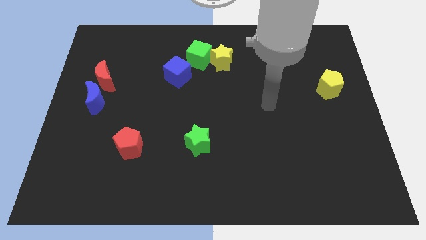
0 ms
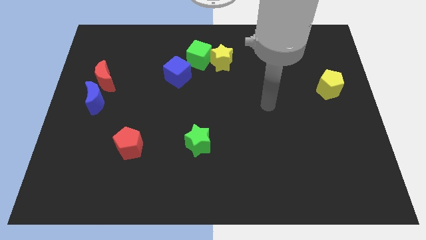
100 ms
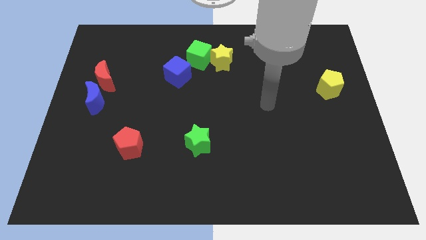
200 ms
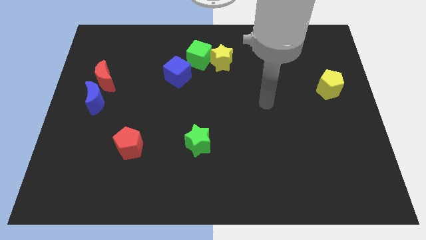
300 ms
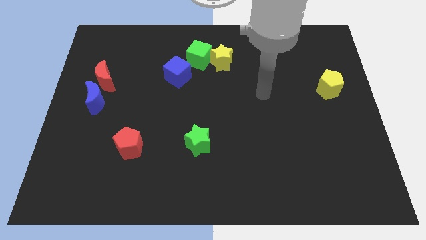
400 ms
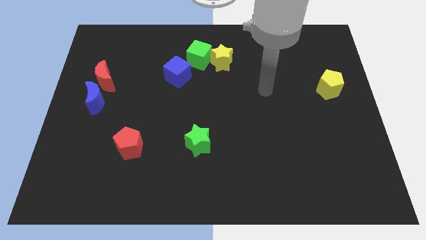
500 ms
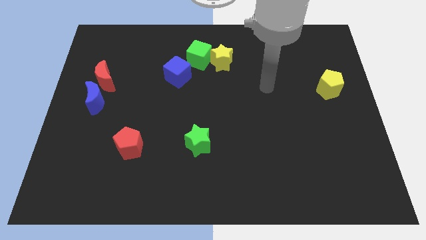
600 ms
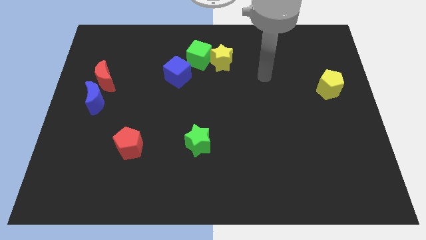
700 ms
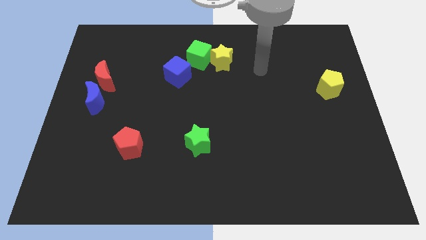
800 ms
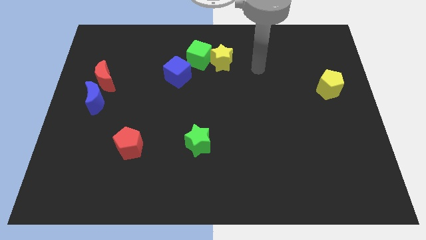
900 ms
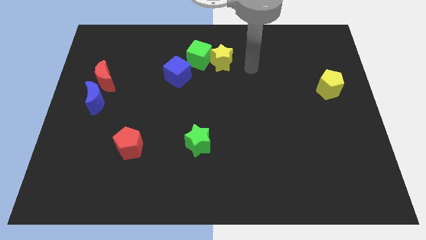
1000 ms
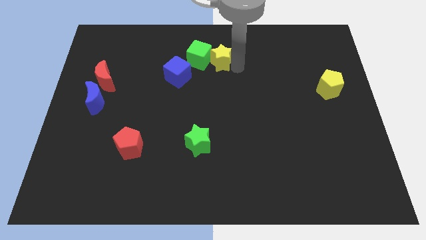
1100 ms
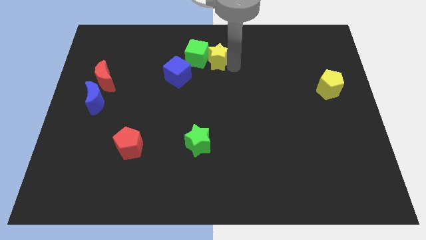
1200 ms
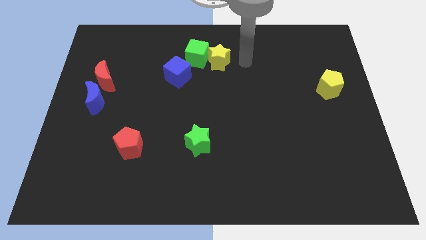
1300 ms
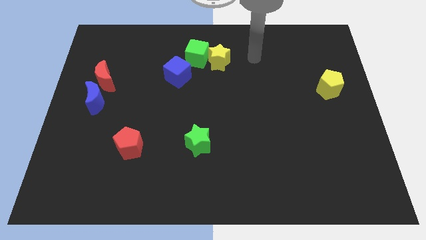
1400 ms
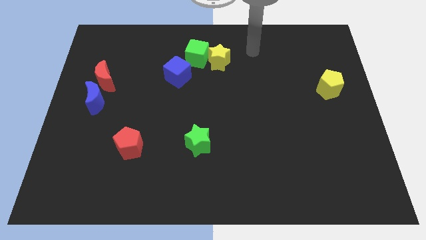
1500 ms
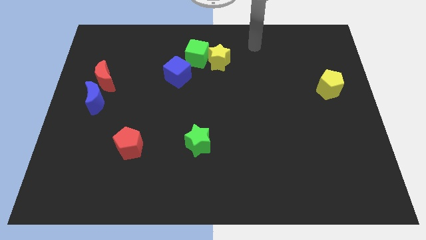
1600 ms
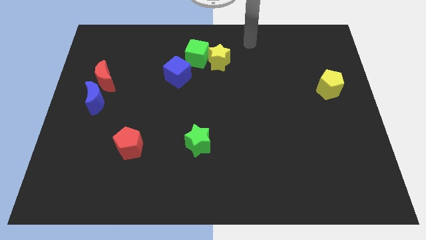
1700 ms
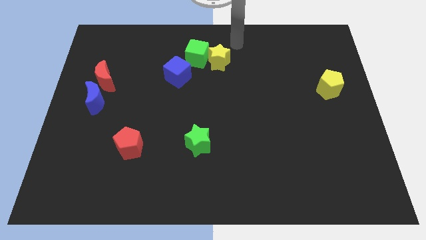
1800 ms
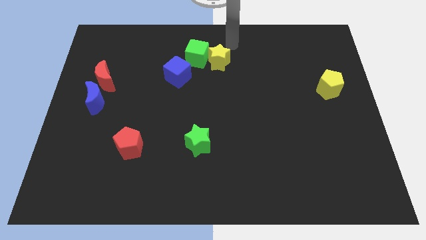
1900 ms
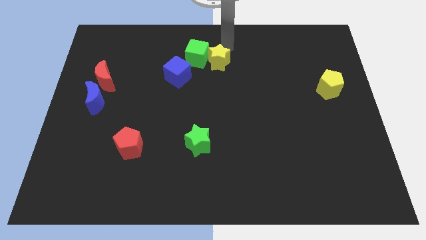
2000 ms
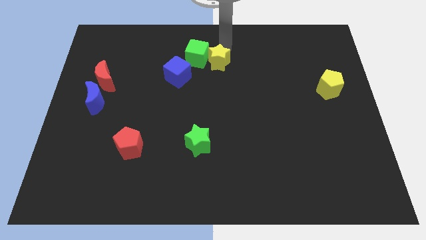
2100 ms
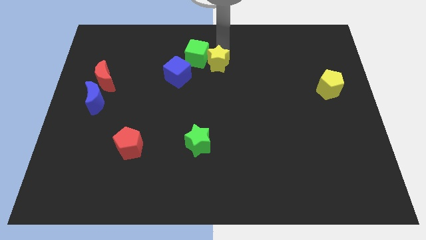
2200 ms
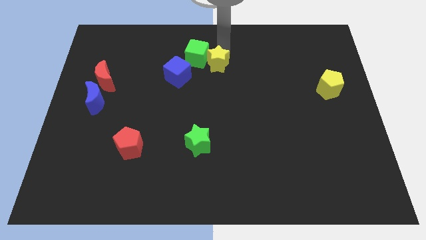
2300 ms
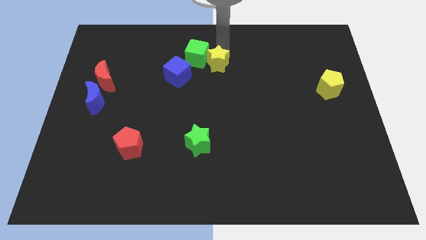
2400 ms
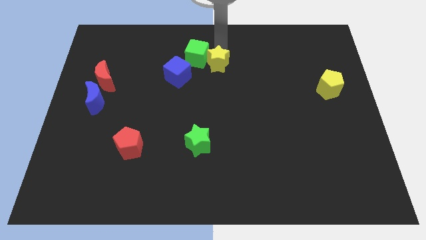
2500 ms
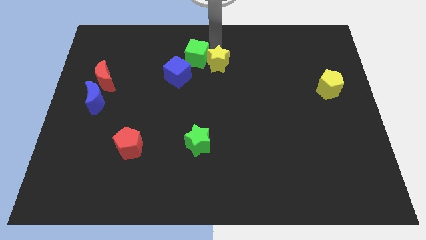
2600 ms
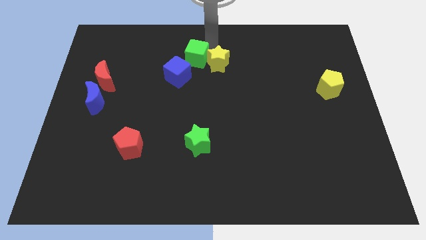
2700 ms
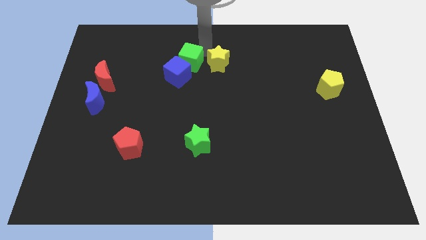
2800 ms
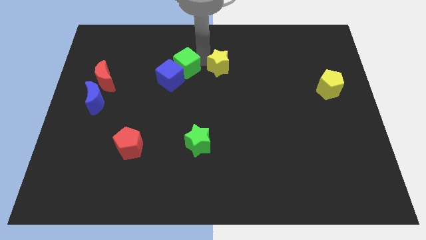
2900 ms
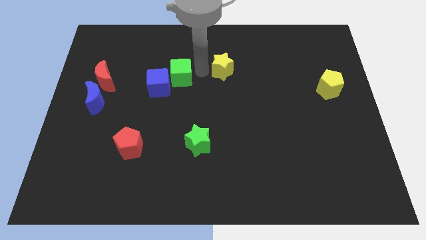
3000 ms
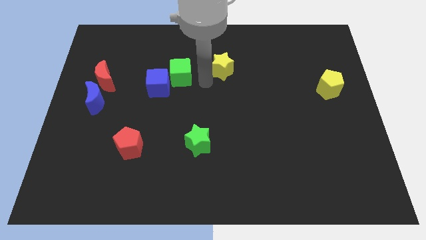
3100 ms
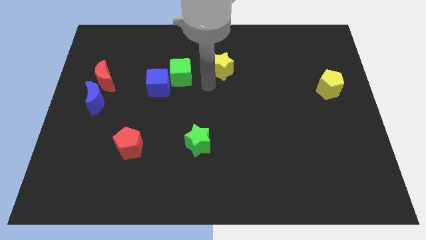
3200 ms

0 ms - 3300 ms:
separate the green cube and yellow star from each other

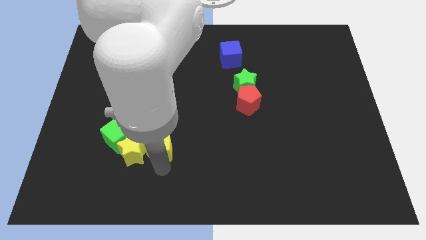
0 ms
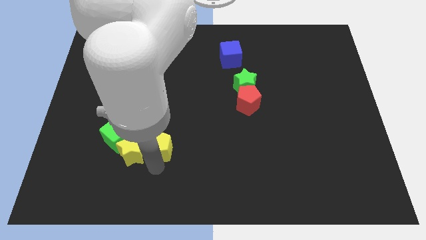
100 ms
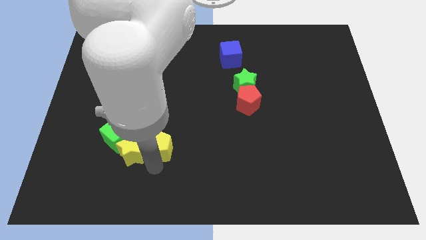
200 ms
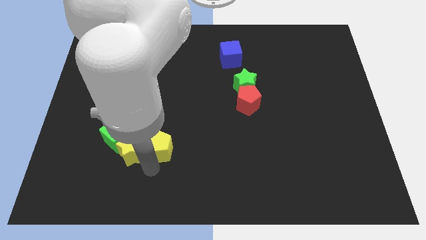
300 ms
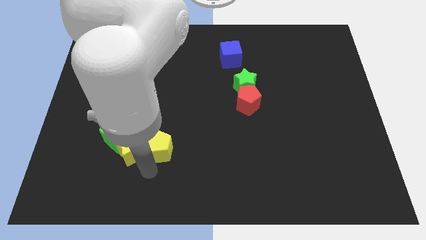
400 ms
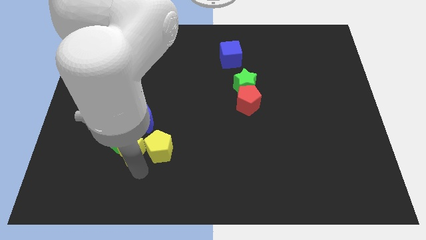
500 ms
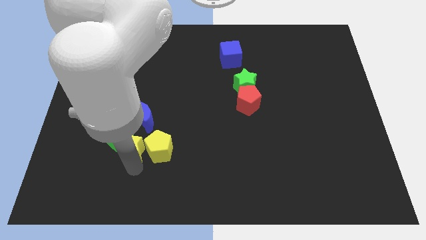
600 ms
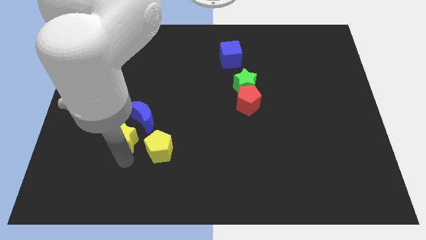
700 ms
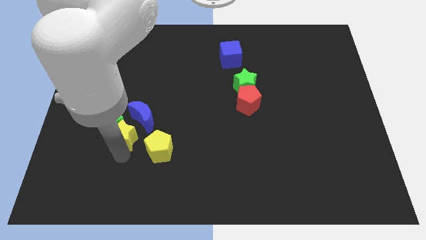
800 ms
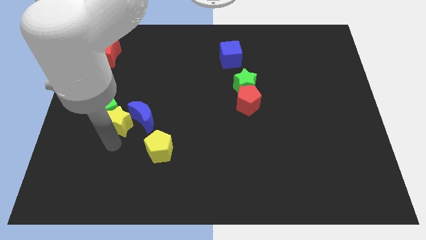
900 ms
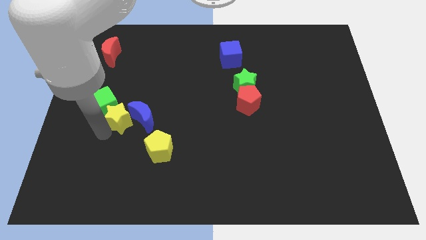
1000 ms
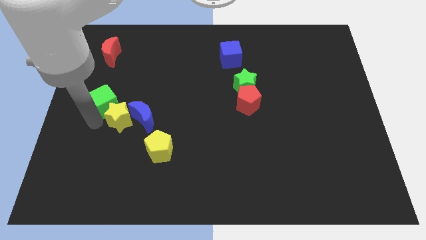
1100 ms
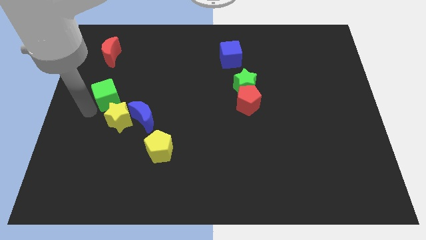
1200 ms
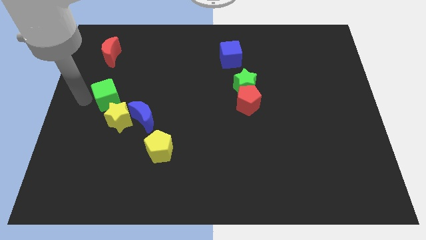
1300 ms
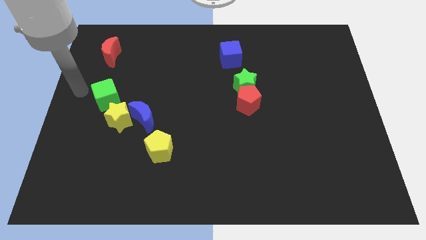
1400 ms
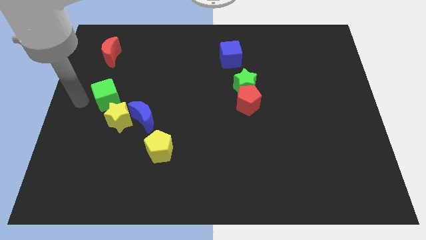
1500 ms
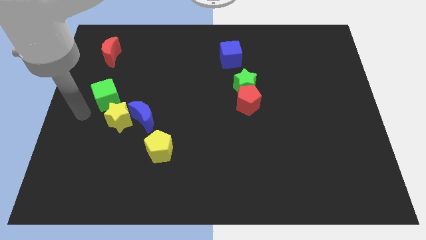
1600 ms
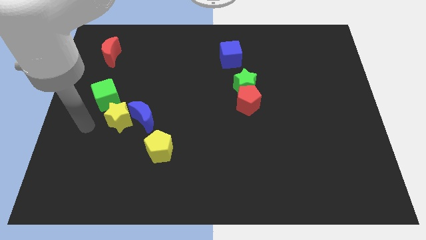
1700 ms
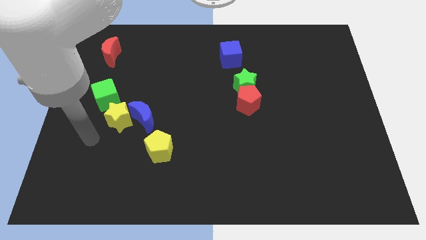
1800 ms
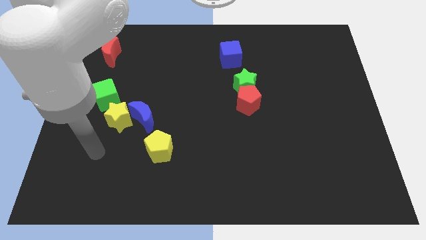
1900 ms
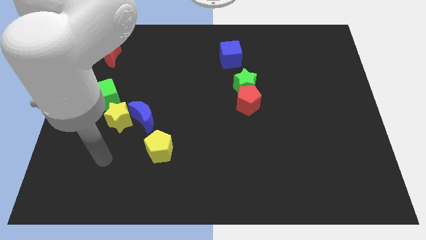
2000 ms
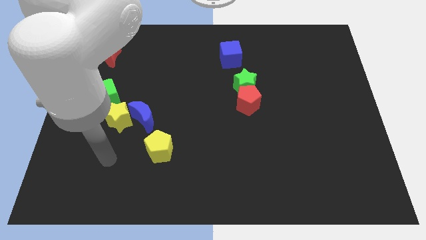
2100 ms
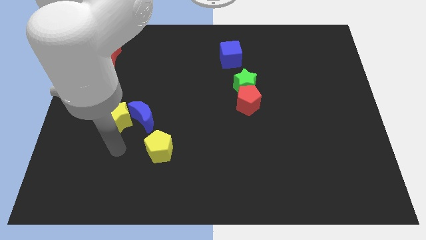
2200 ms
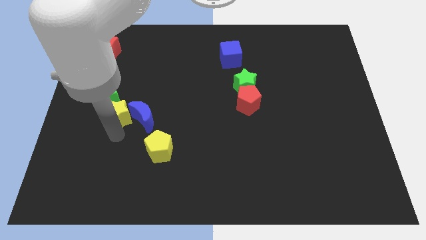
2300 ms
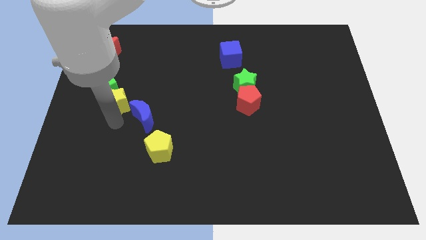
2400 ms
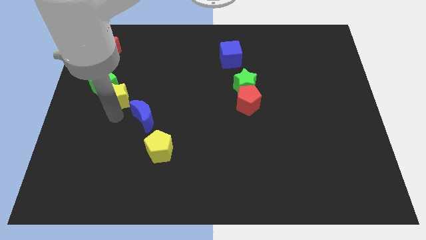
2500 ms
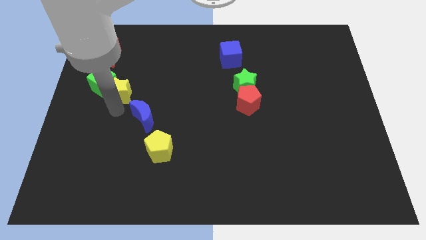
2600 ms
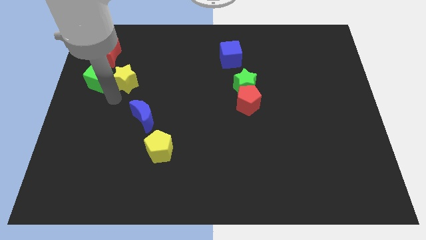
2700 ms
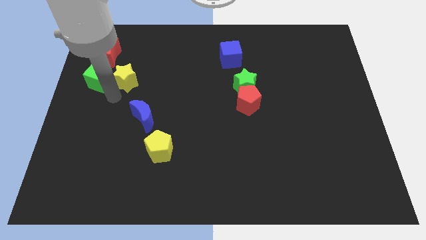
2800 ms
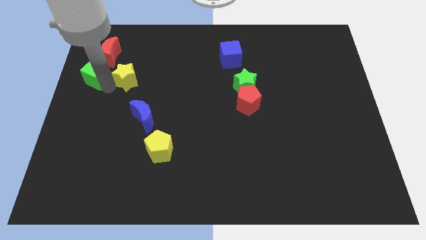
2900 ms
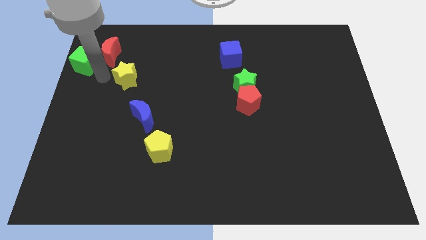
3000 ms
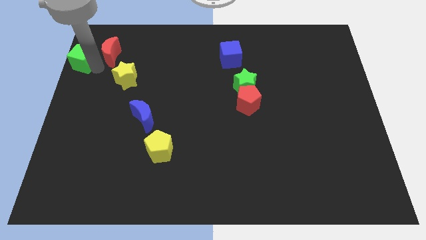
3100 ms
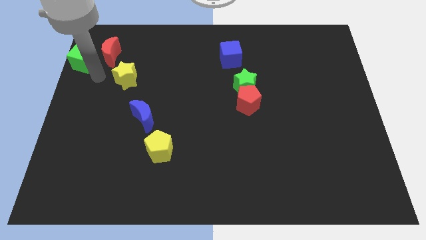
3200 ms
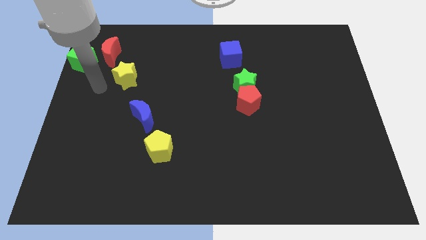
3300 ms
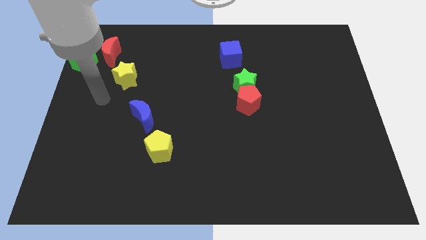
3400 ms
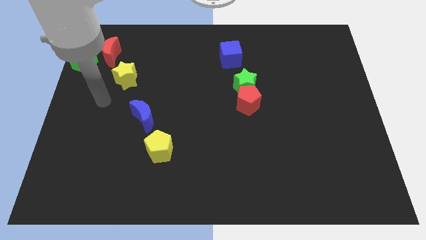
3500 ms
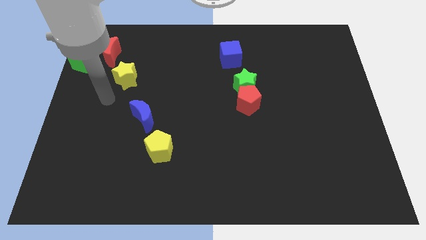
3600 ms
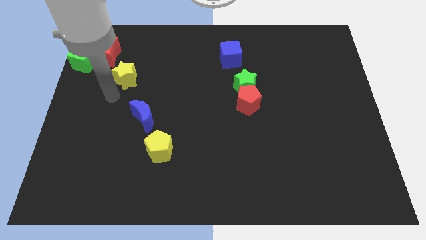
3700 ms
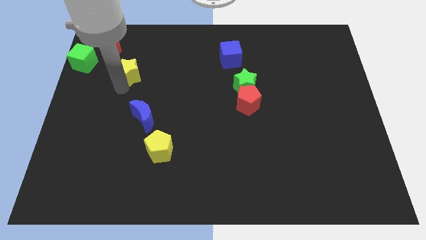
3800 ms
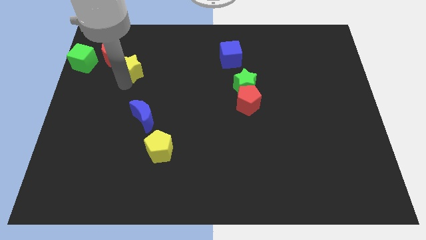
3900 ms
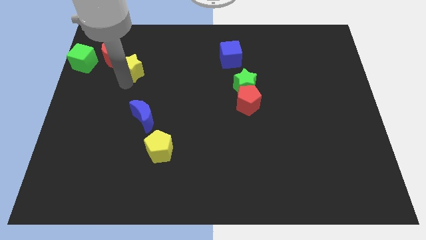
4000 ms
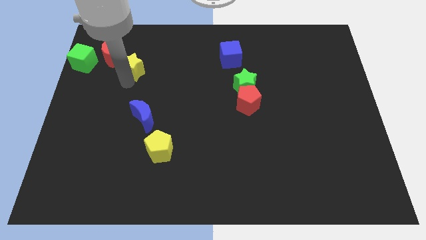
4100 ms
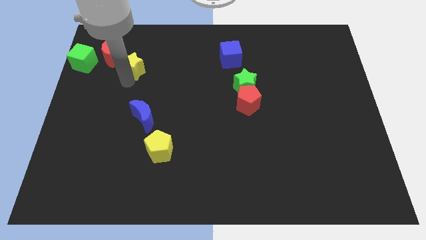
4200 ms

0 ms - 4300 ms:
separate the green block and yellow star from yellow pentagon

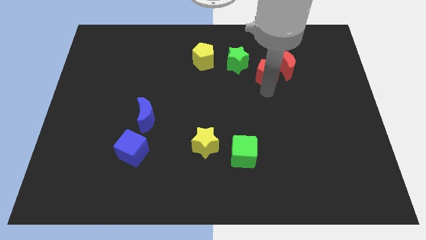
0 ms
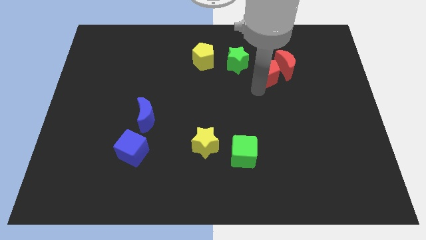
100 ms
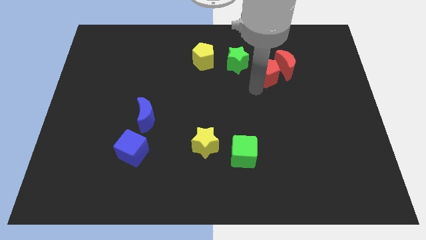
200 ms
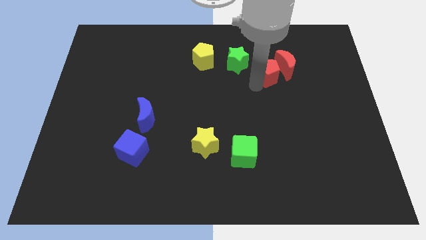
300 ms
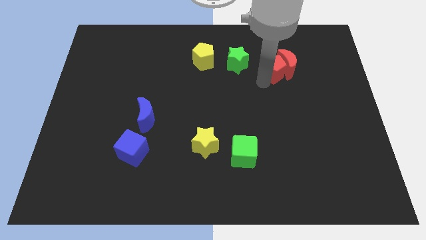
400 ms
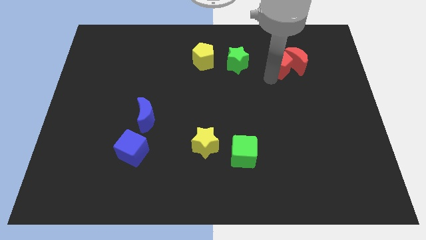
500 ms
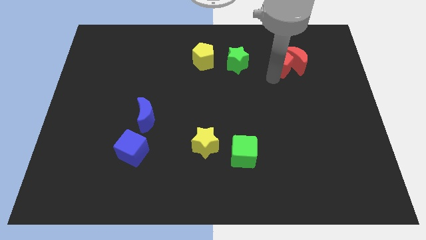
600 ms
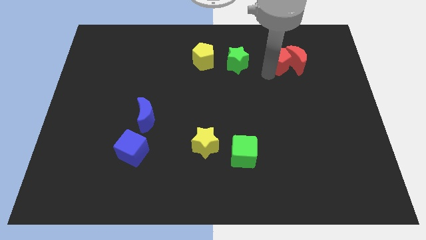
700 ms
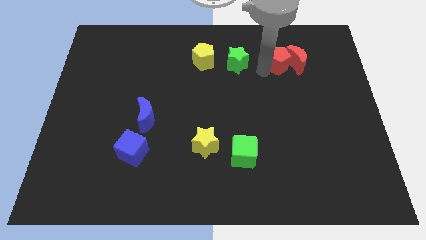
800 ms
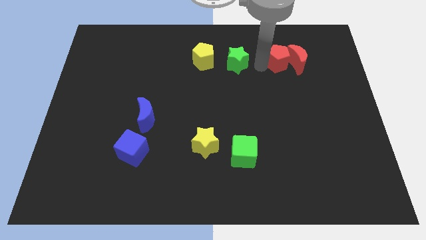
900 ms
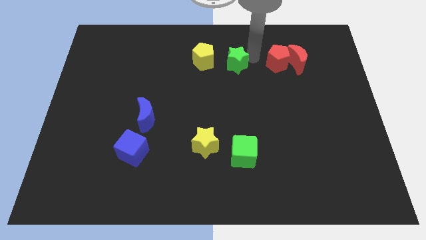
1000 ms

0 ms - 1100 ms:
push the red pentagon along with red crescent towards parallel to the green star

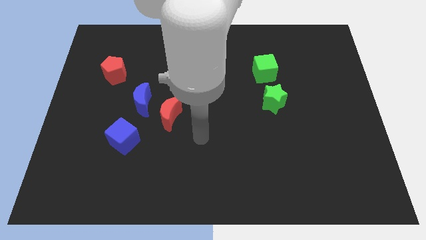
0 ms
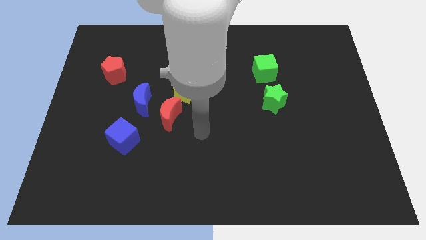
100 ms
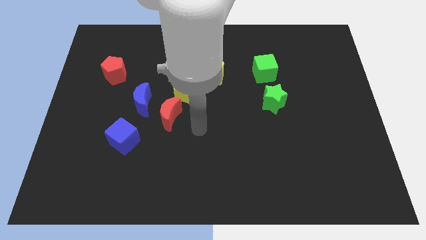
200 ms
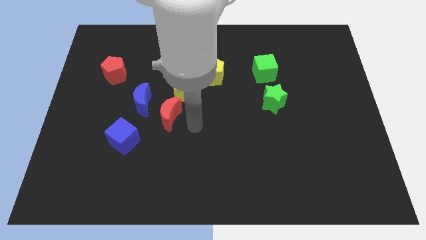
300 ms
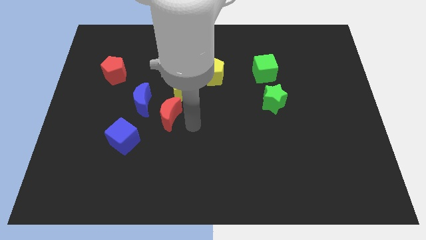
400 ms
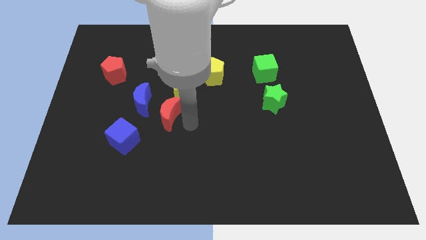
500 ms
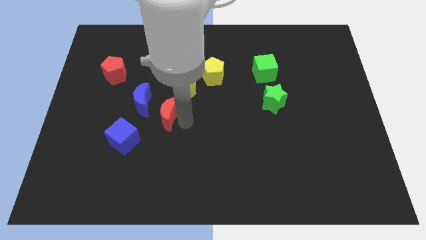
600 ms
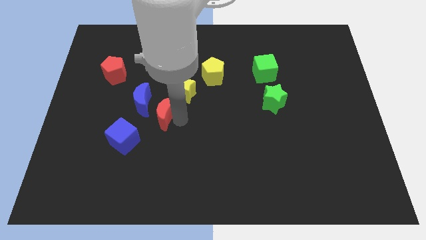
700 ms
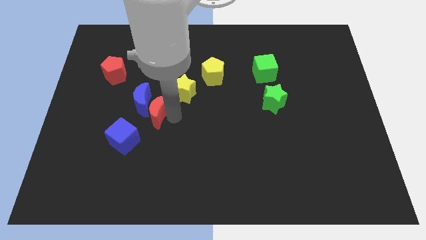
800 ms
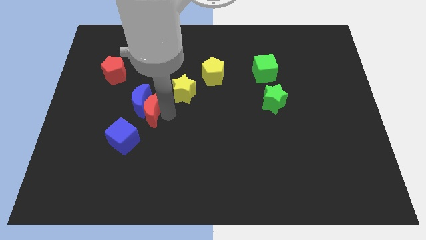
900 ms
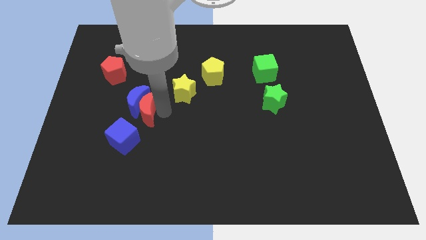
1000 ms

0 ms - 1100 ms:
push red moon in to blue moon
